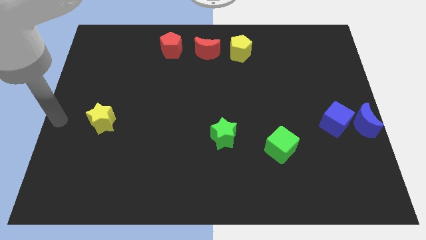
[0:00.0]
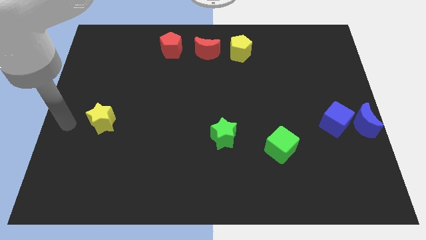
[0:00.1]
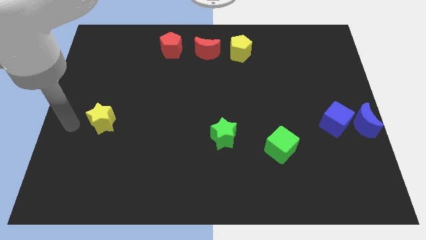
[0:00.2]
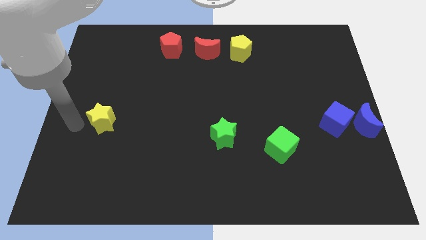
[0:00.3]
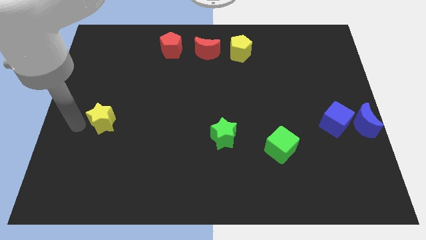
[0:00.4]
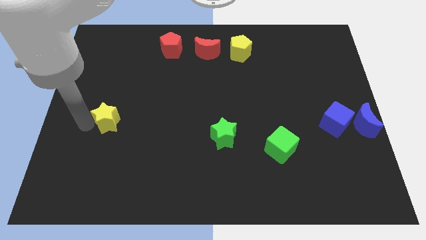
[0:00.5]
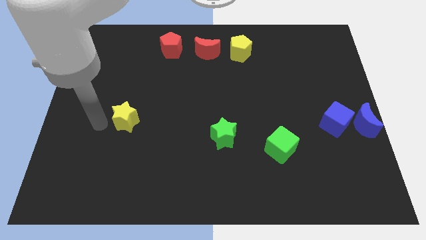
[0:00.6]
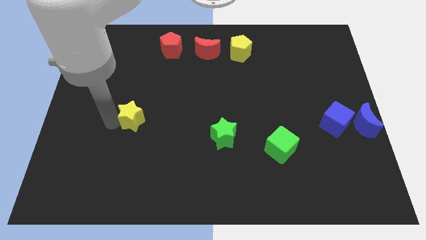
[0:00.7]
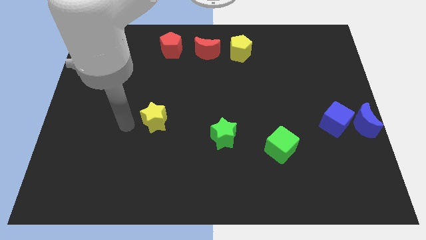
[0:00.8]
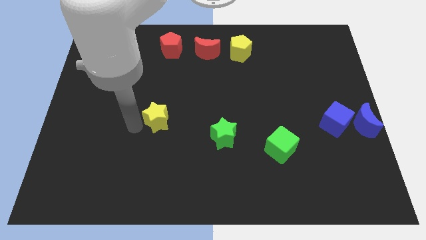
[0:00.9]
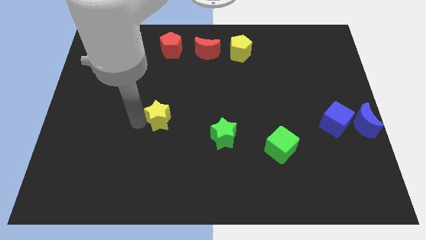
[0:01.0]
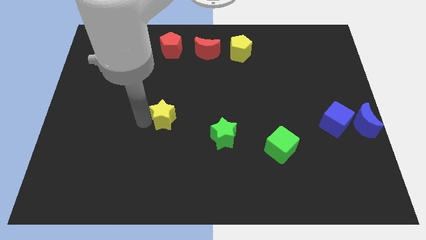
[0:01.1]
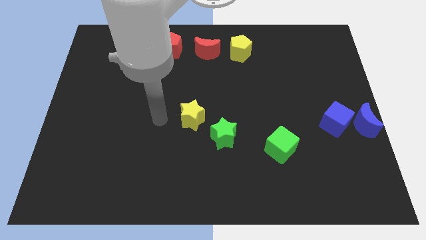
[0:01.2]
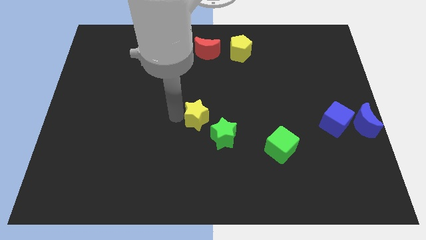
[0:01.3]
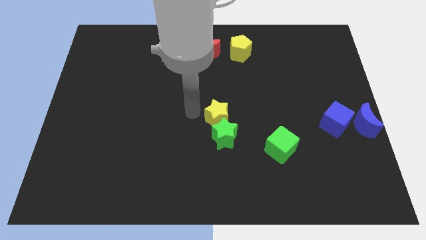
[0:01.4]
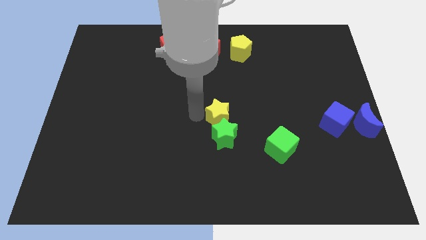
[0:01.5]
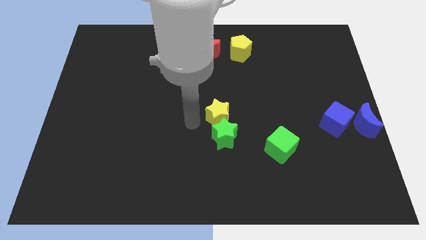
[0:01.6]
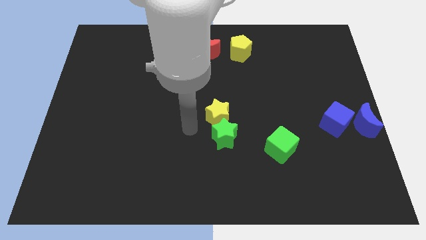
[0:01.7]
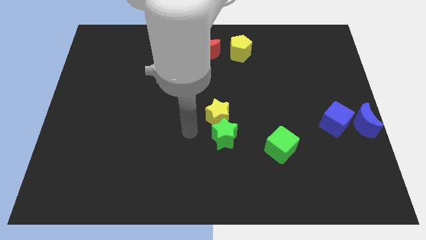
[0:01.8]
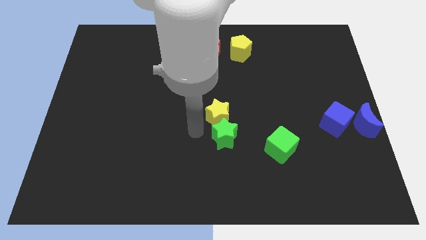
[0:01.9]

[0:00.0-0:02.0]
place the yellow star above the green star

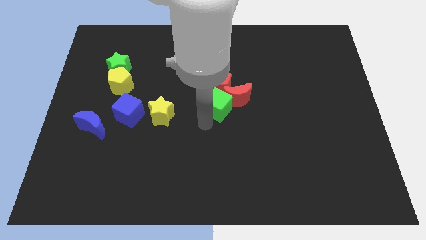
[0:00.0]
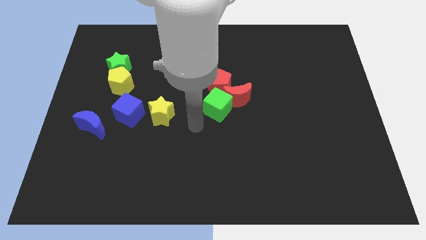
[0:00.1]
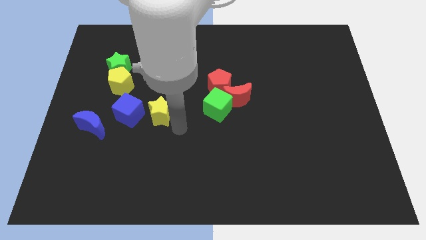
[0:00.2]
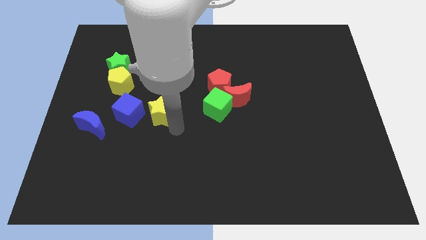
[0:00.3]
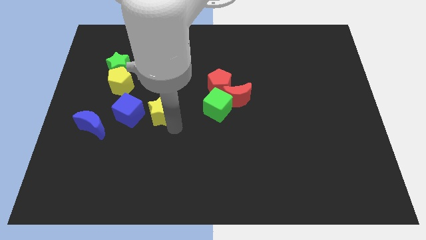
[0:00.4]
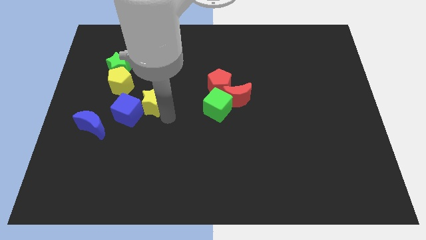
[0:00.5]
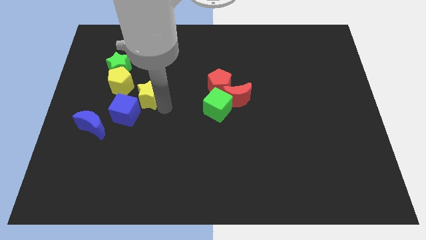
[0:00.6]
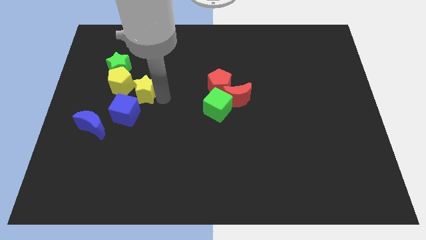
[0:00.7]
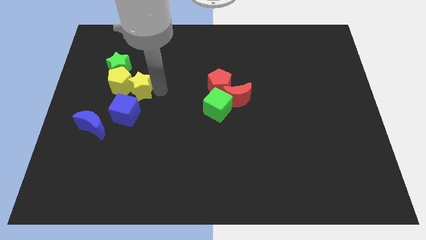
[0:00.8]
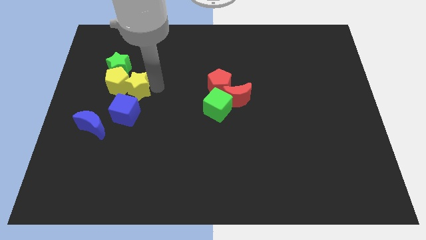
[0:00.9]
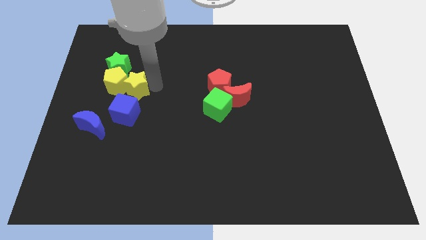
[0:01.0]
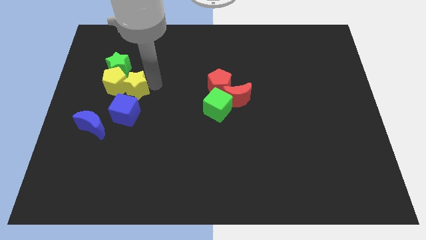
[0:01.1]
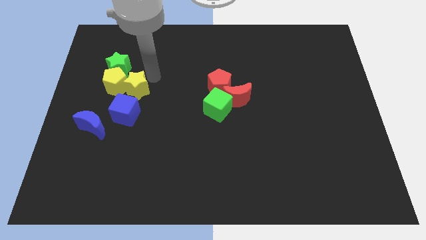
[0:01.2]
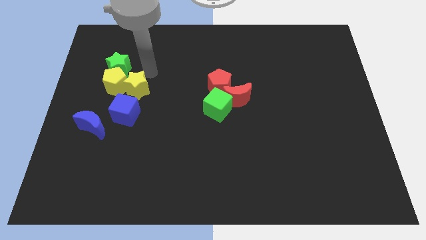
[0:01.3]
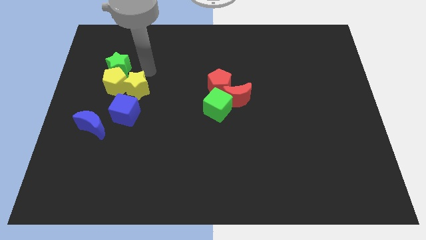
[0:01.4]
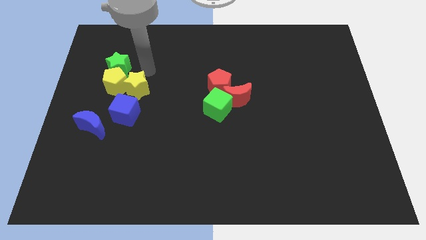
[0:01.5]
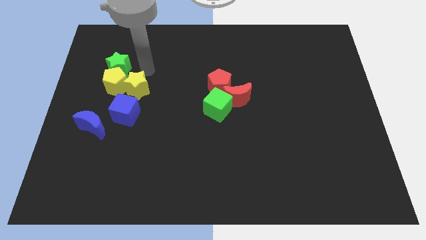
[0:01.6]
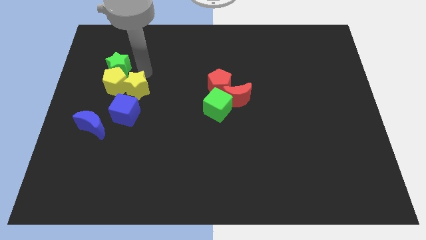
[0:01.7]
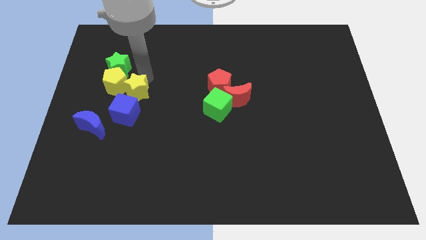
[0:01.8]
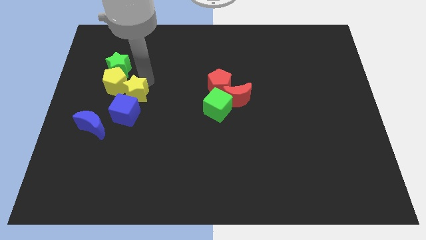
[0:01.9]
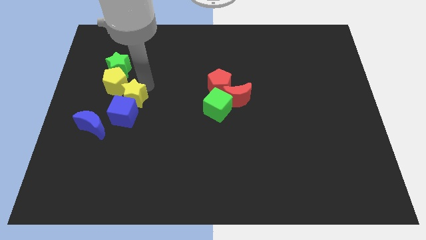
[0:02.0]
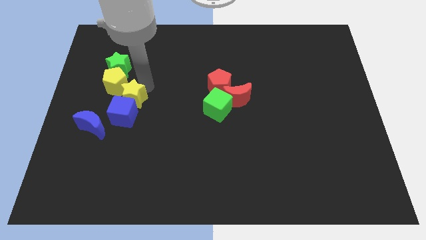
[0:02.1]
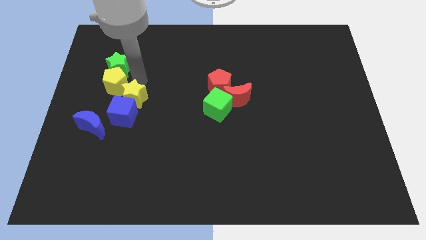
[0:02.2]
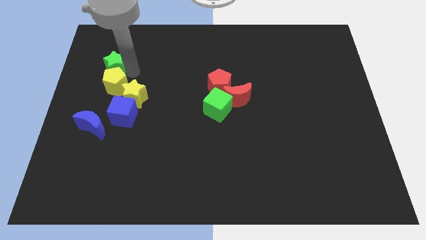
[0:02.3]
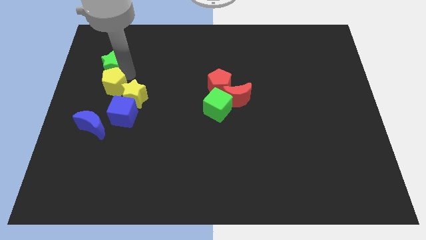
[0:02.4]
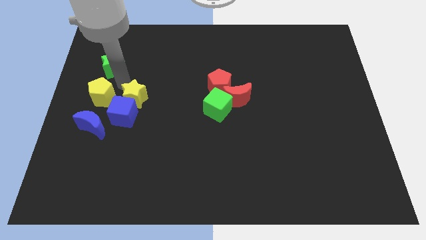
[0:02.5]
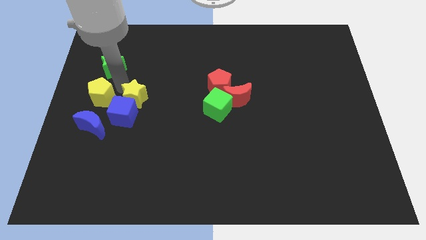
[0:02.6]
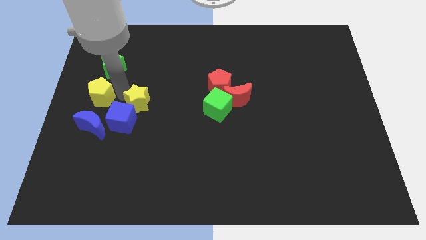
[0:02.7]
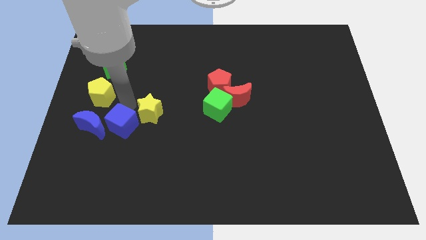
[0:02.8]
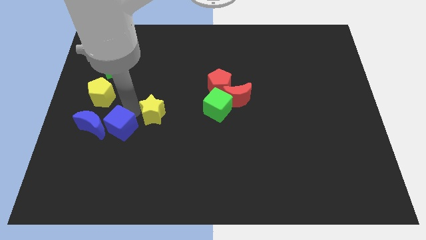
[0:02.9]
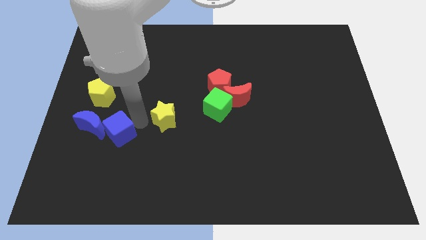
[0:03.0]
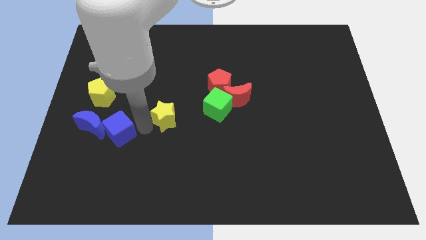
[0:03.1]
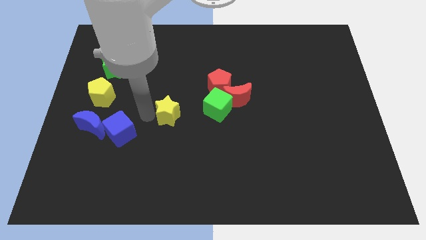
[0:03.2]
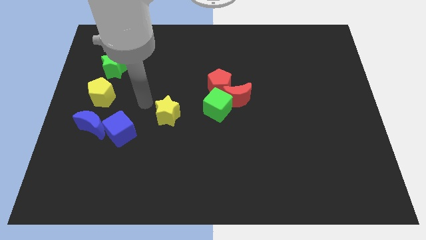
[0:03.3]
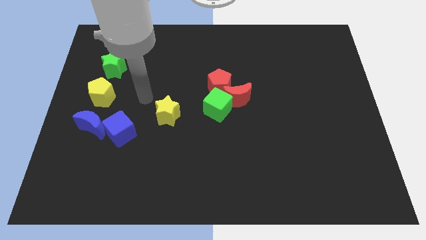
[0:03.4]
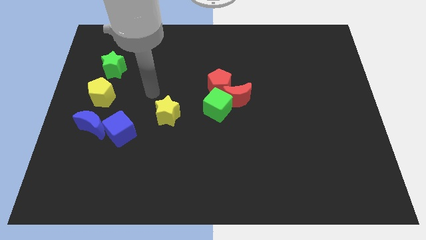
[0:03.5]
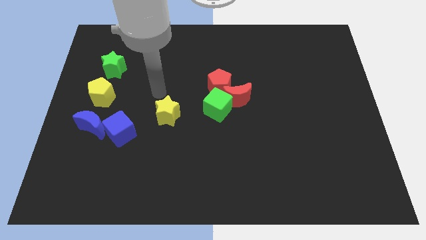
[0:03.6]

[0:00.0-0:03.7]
separate the blue cube and yellow pentagon with the yellow star

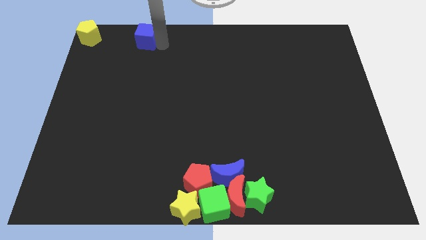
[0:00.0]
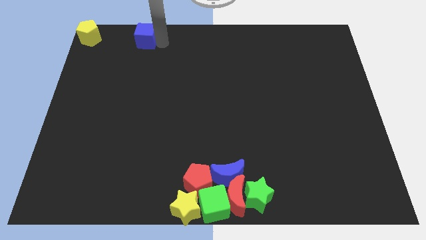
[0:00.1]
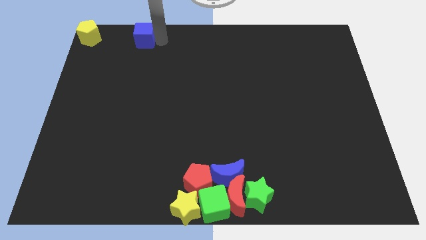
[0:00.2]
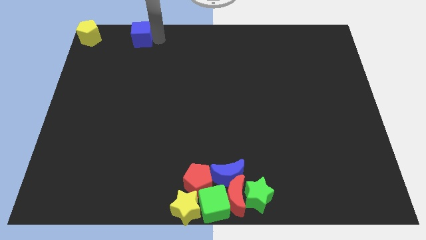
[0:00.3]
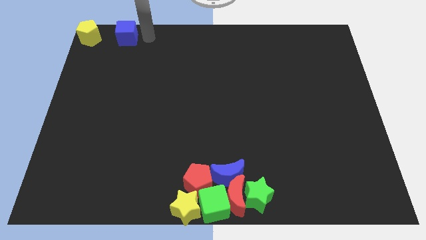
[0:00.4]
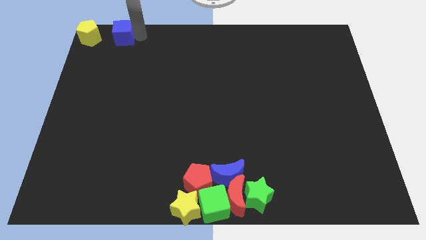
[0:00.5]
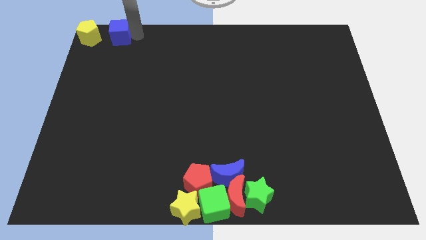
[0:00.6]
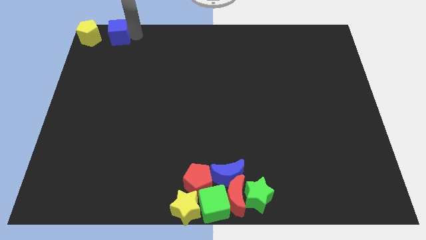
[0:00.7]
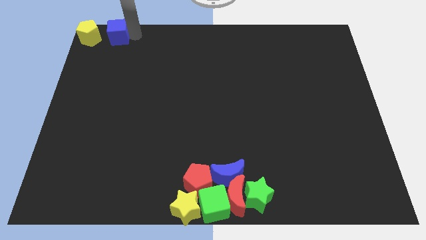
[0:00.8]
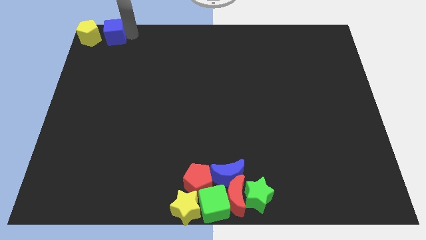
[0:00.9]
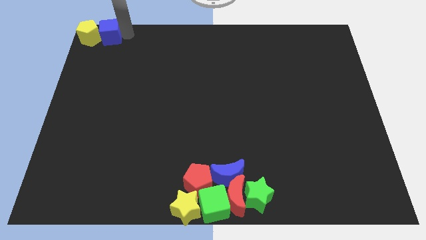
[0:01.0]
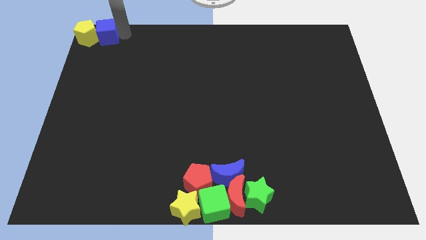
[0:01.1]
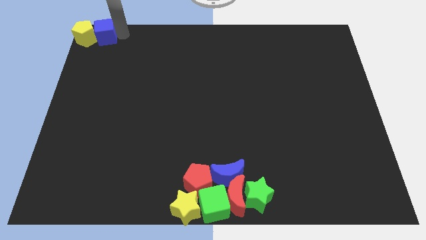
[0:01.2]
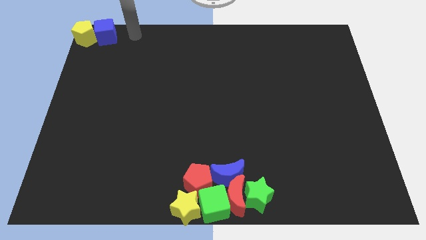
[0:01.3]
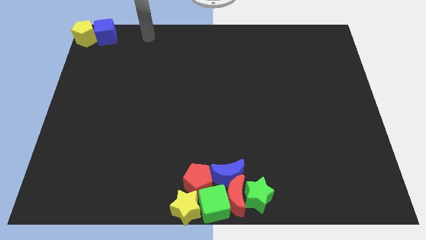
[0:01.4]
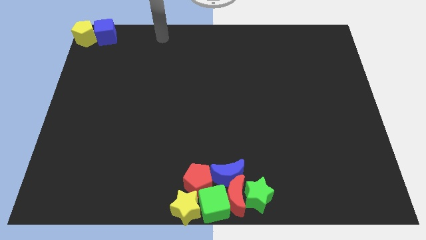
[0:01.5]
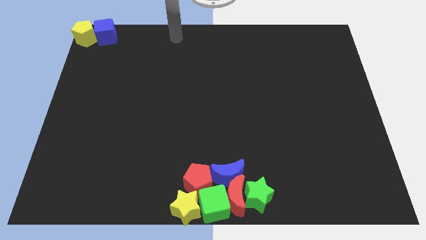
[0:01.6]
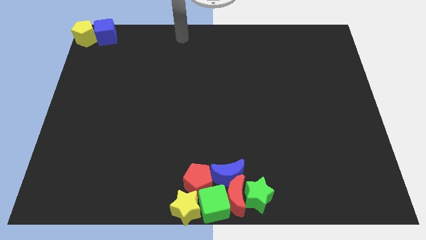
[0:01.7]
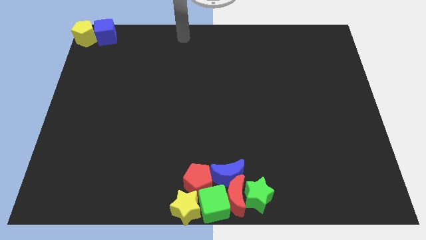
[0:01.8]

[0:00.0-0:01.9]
put the blue cube into the yellow pentagon

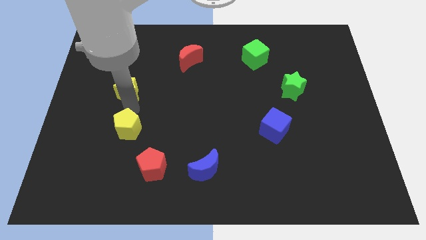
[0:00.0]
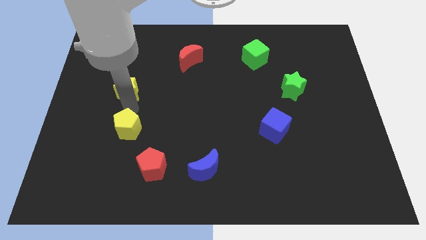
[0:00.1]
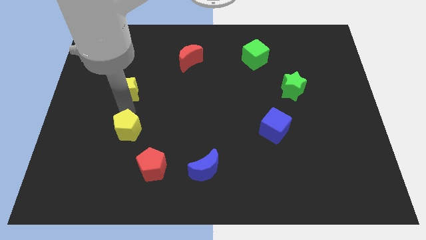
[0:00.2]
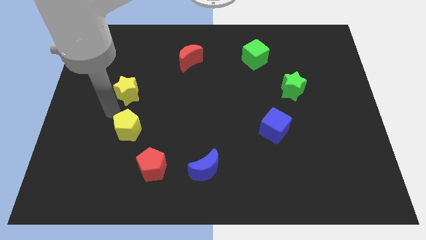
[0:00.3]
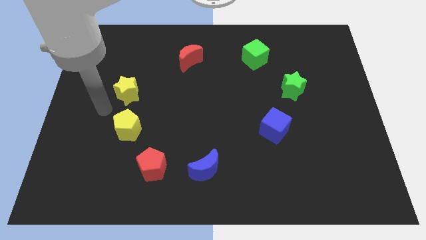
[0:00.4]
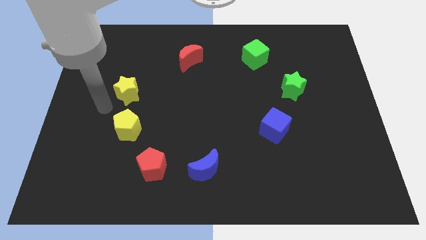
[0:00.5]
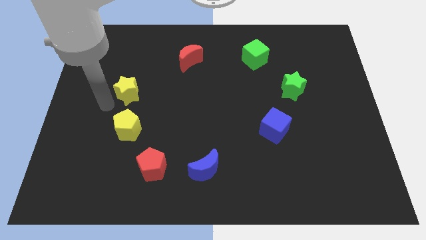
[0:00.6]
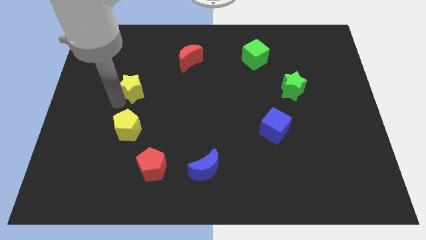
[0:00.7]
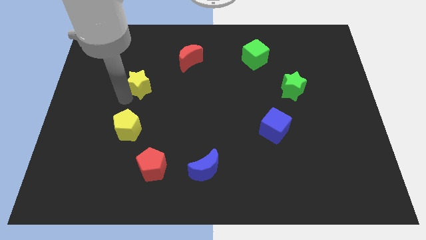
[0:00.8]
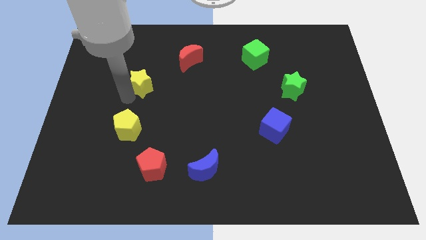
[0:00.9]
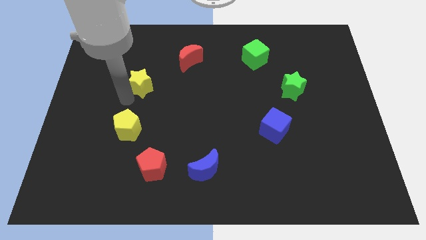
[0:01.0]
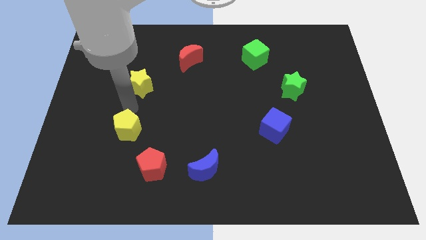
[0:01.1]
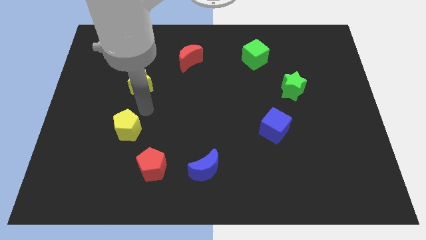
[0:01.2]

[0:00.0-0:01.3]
move the yellow star slightly right

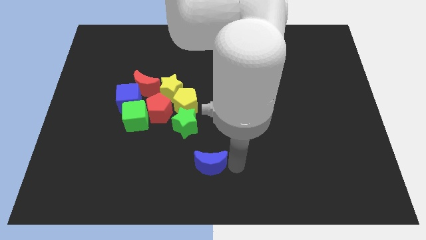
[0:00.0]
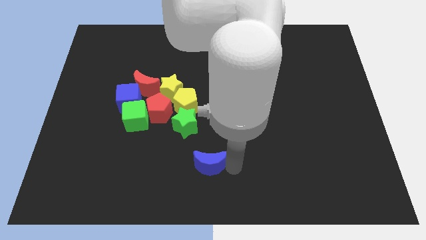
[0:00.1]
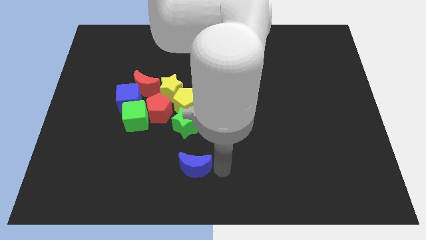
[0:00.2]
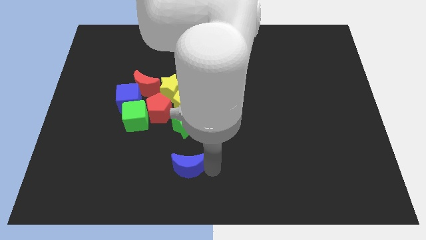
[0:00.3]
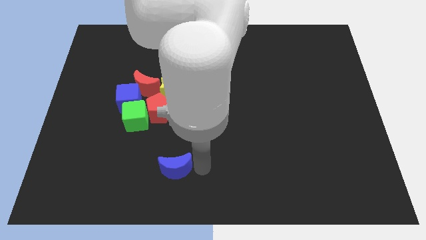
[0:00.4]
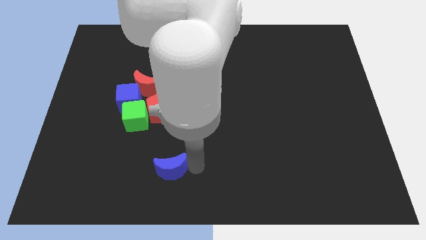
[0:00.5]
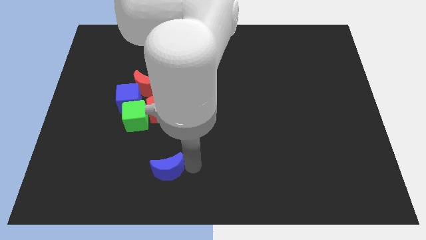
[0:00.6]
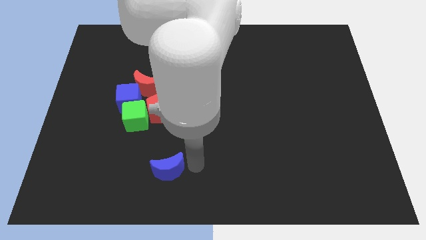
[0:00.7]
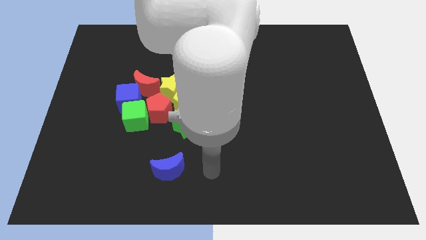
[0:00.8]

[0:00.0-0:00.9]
push the blue crescent to the left
